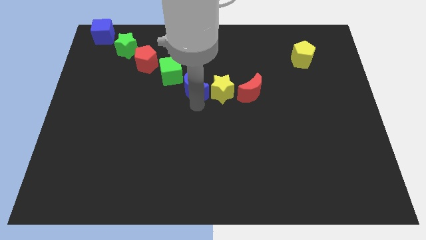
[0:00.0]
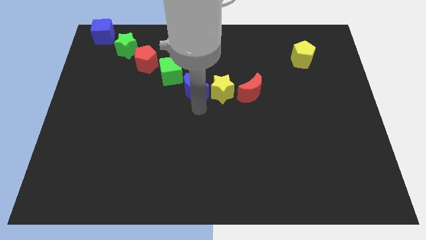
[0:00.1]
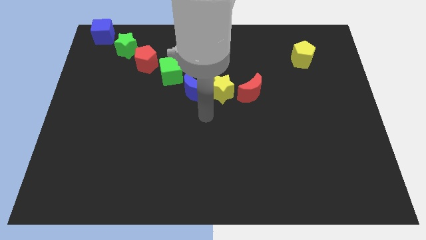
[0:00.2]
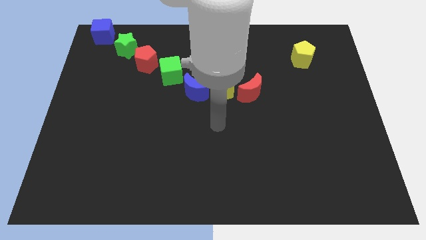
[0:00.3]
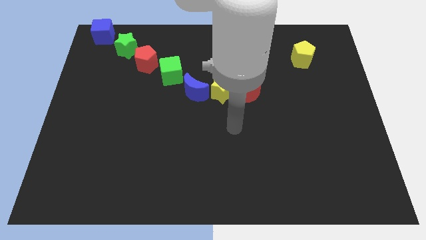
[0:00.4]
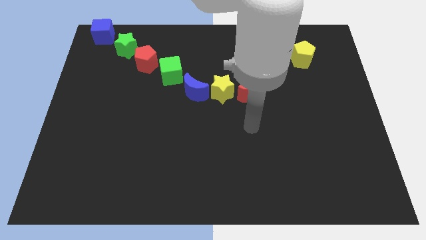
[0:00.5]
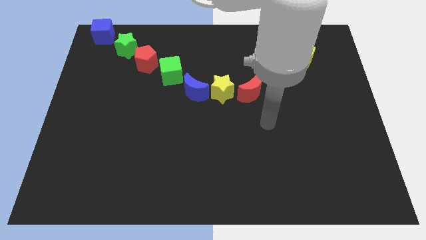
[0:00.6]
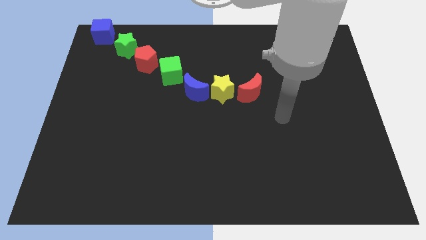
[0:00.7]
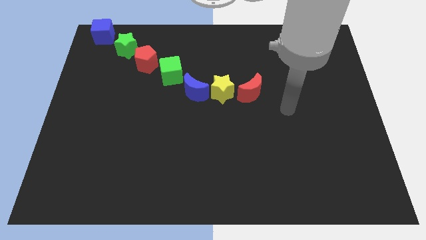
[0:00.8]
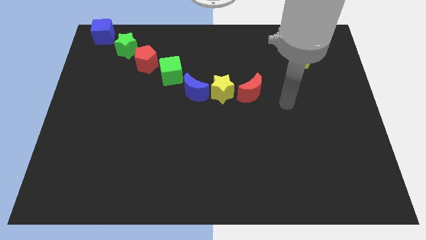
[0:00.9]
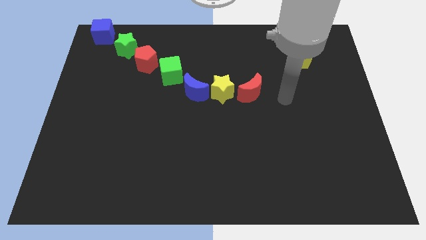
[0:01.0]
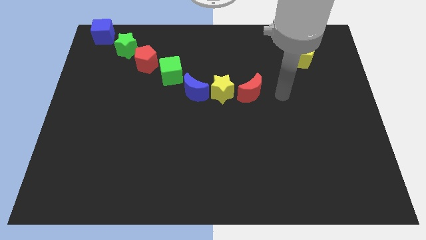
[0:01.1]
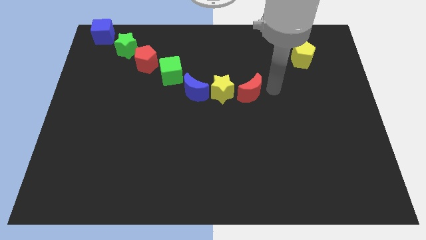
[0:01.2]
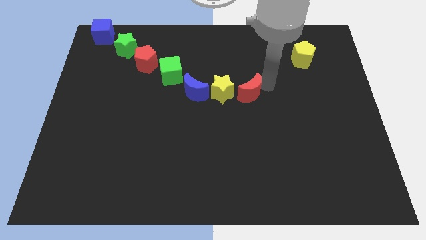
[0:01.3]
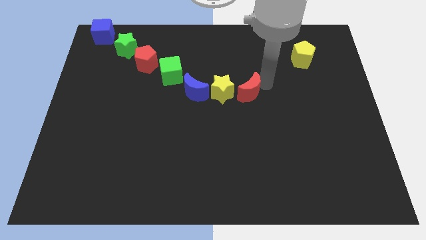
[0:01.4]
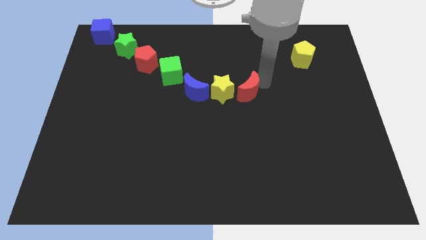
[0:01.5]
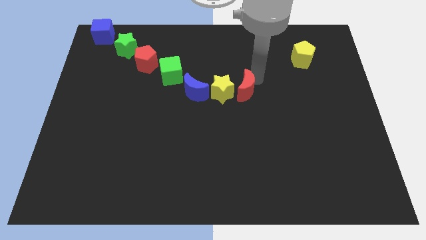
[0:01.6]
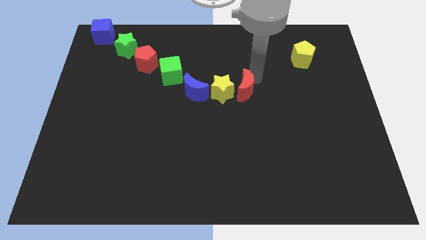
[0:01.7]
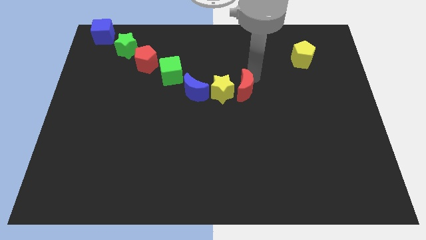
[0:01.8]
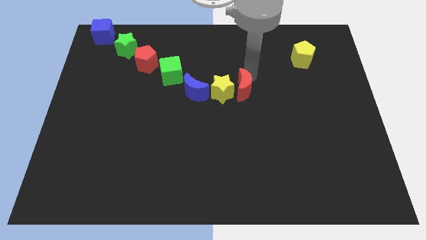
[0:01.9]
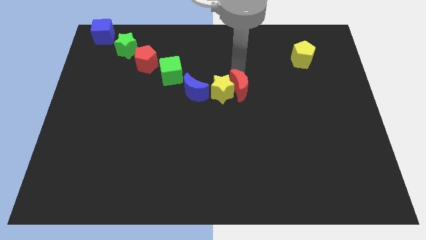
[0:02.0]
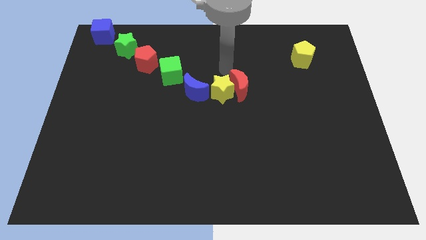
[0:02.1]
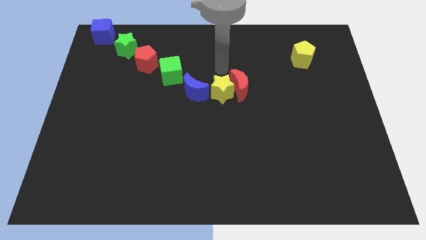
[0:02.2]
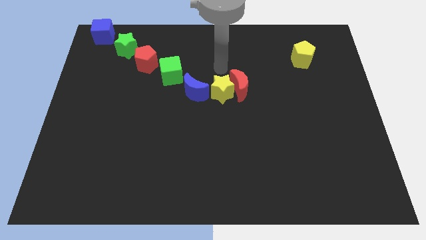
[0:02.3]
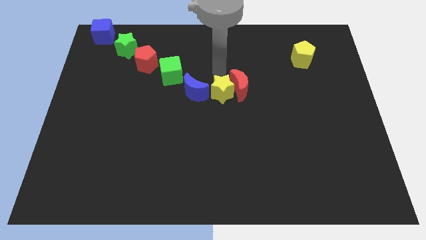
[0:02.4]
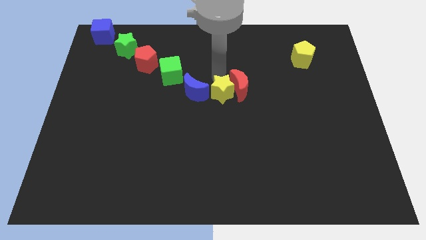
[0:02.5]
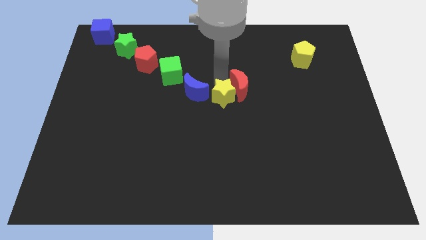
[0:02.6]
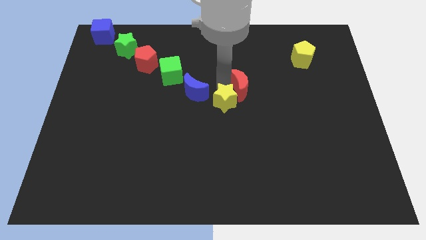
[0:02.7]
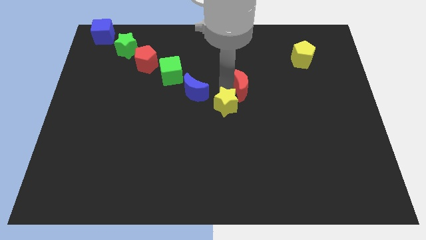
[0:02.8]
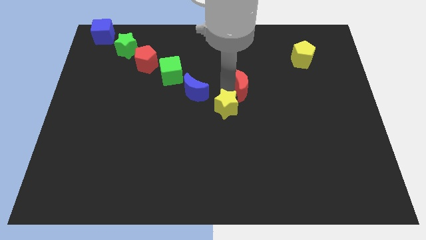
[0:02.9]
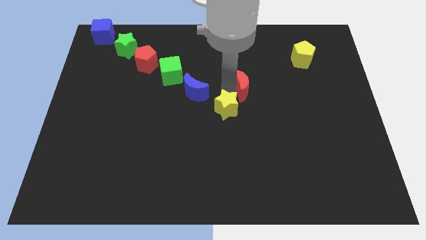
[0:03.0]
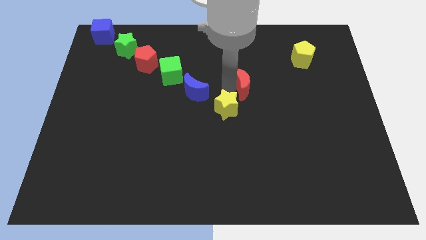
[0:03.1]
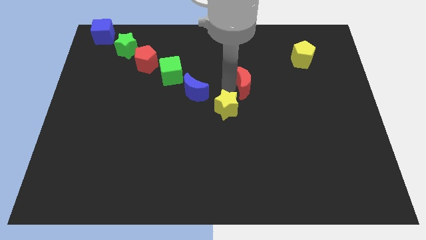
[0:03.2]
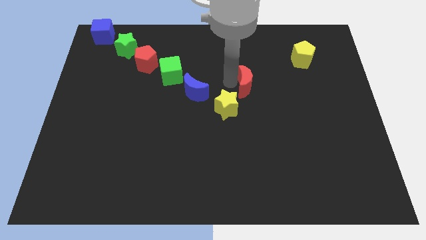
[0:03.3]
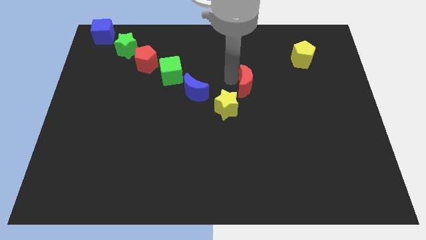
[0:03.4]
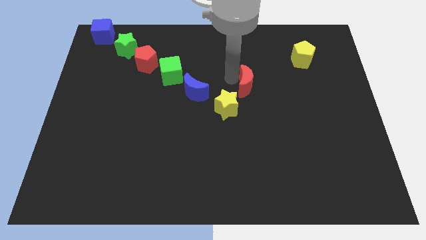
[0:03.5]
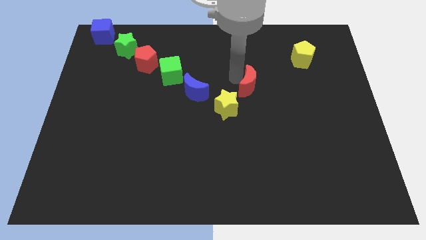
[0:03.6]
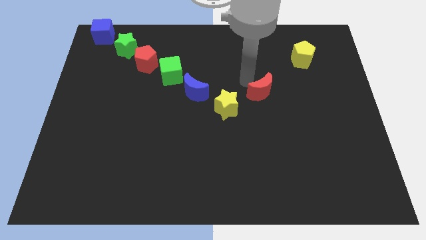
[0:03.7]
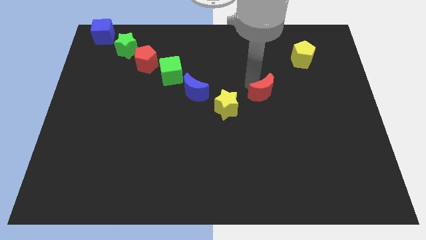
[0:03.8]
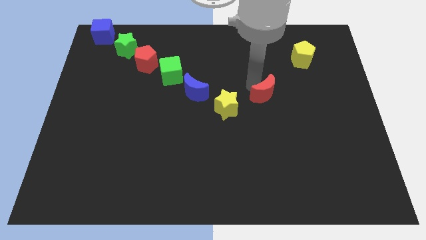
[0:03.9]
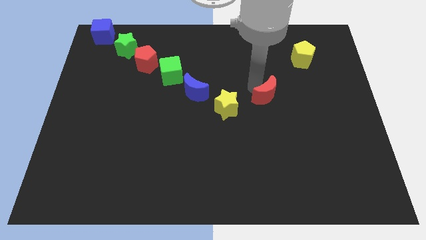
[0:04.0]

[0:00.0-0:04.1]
move the yellow star diagonally below the blue moon

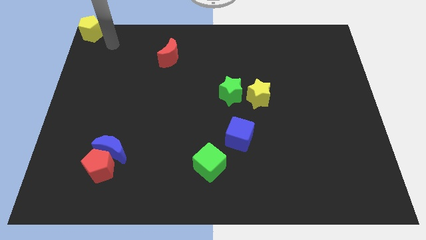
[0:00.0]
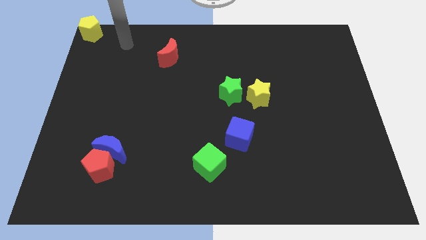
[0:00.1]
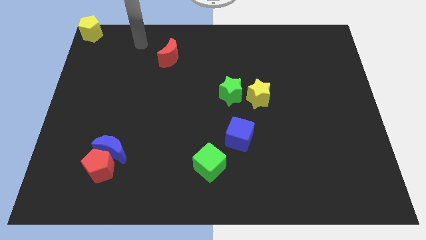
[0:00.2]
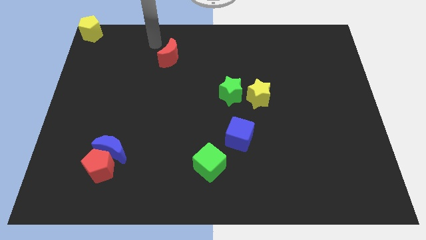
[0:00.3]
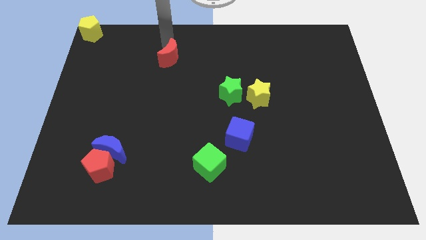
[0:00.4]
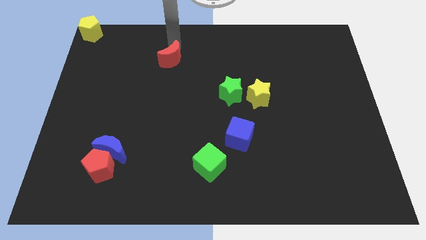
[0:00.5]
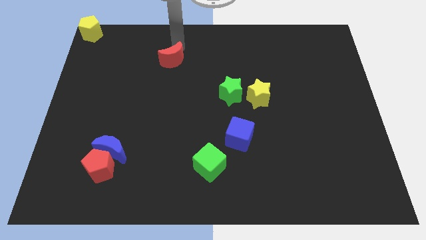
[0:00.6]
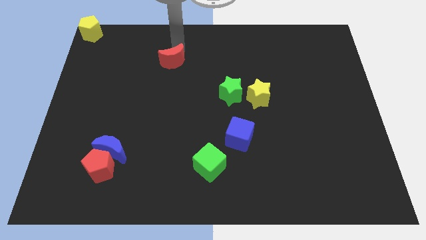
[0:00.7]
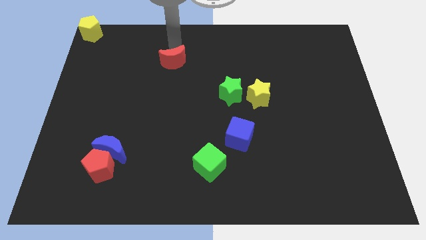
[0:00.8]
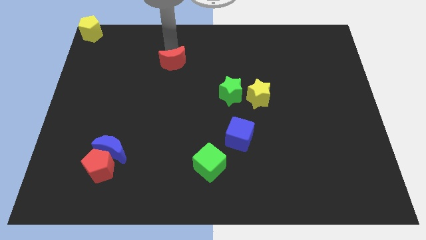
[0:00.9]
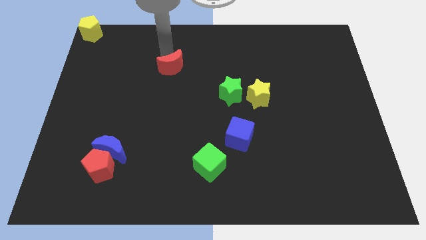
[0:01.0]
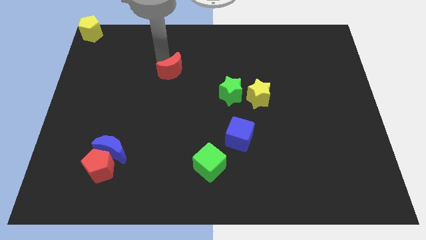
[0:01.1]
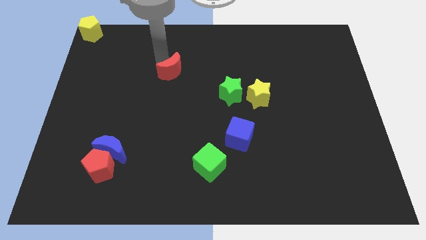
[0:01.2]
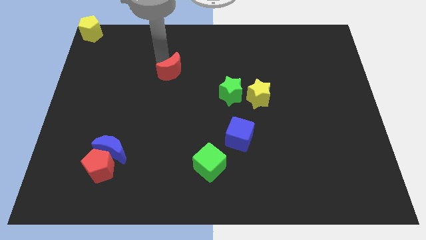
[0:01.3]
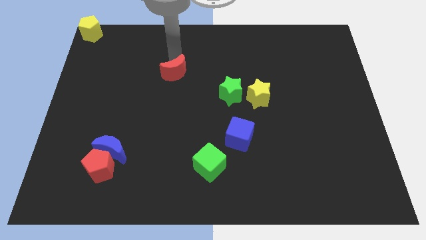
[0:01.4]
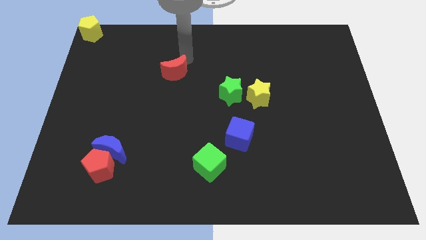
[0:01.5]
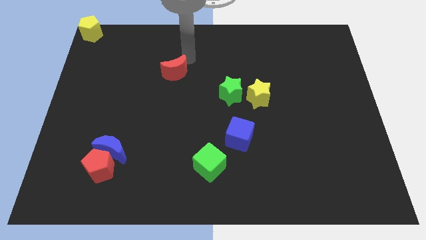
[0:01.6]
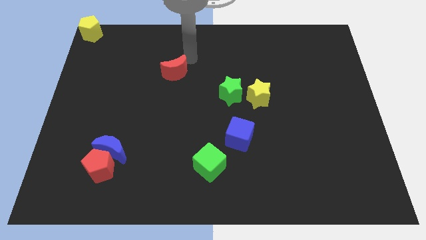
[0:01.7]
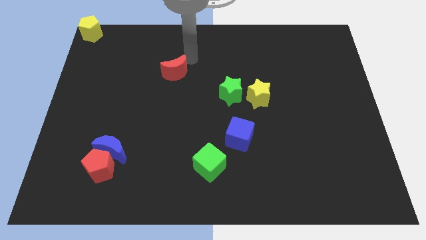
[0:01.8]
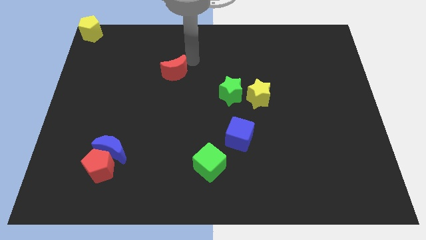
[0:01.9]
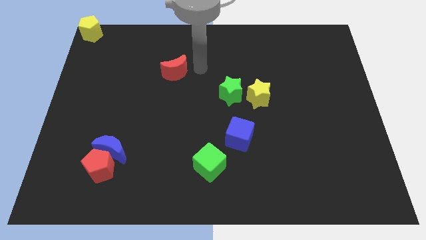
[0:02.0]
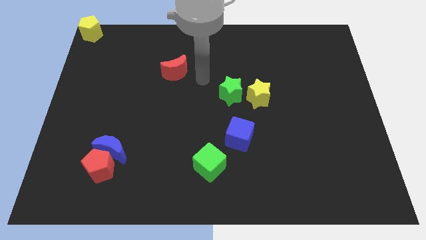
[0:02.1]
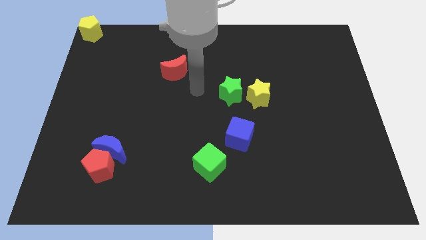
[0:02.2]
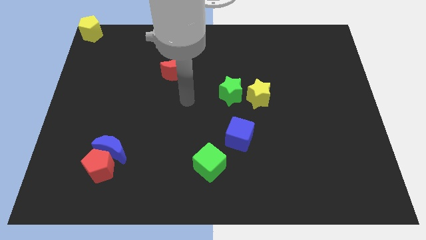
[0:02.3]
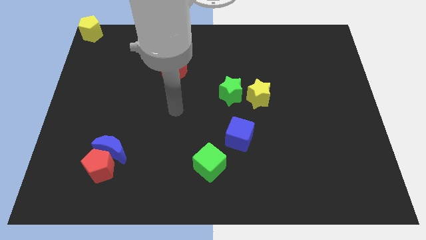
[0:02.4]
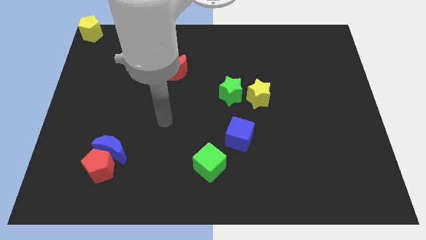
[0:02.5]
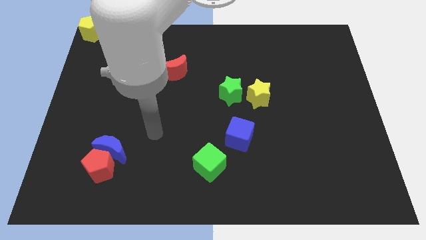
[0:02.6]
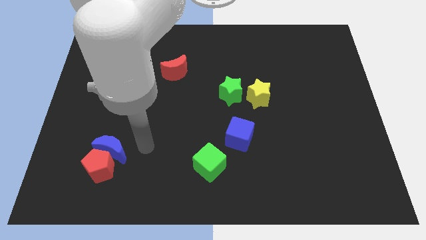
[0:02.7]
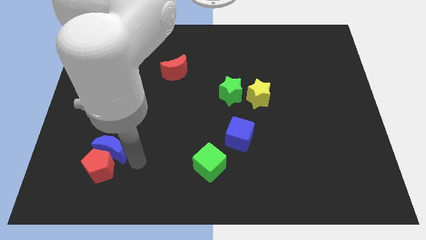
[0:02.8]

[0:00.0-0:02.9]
move red moon slightly to its downwards

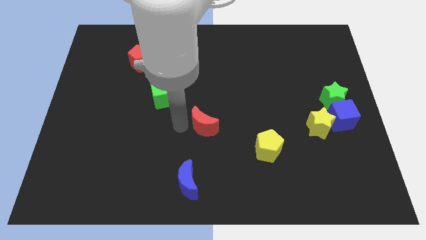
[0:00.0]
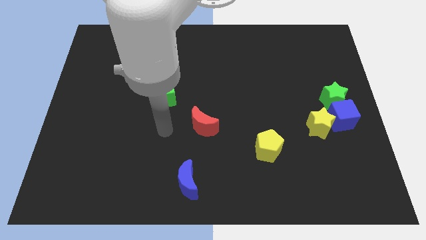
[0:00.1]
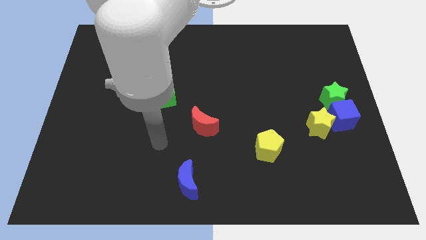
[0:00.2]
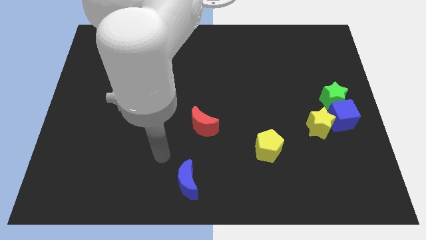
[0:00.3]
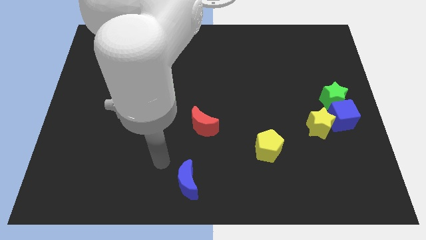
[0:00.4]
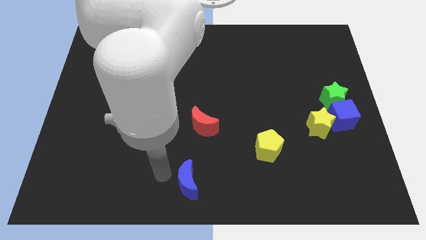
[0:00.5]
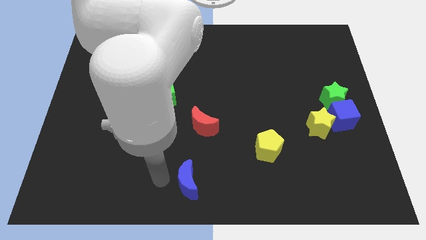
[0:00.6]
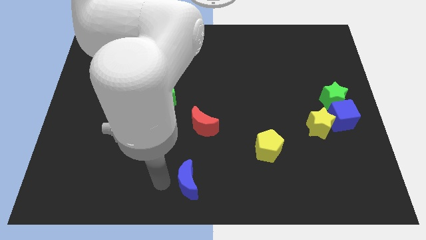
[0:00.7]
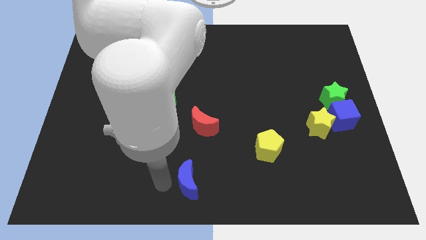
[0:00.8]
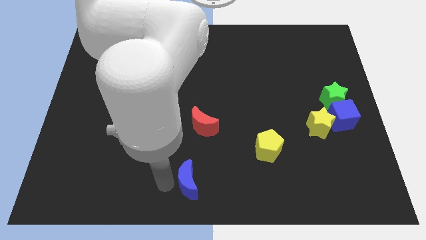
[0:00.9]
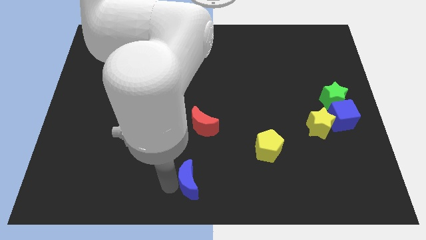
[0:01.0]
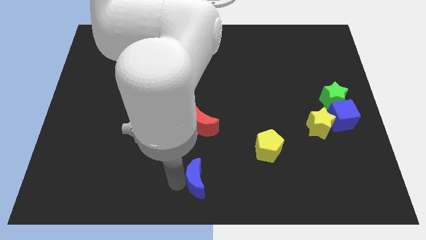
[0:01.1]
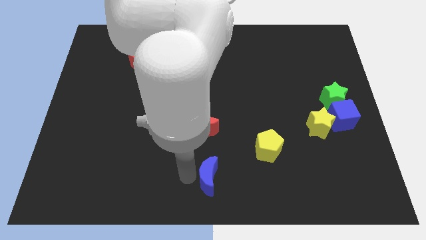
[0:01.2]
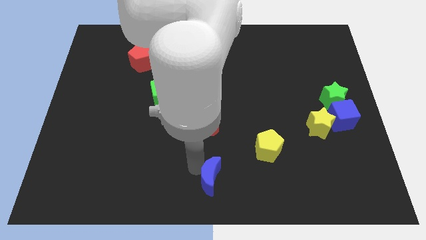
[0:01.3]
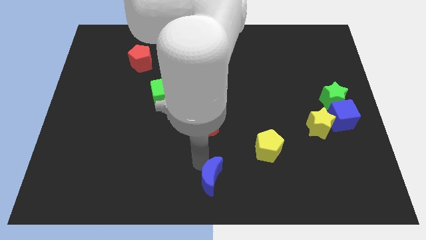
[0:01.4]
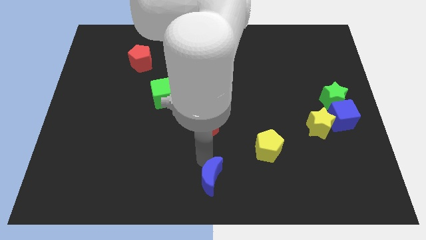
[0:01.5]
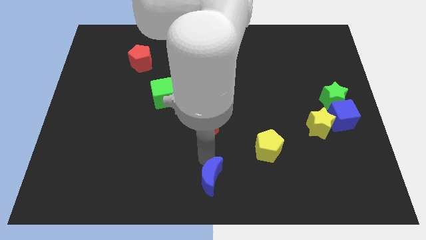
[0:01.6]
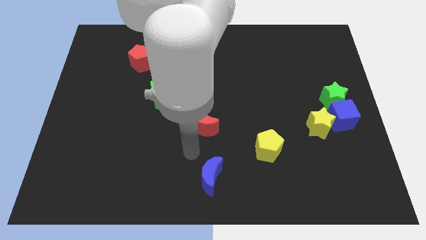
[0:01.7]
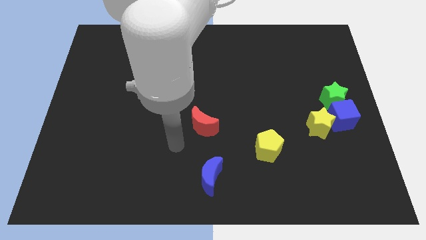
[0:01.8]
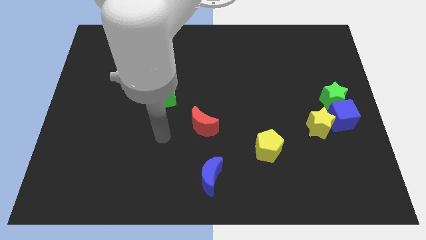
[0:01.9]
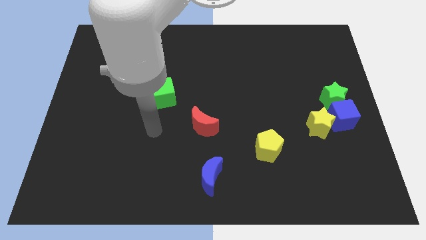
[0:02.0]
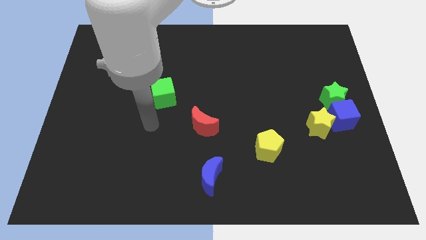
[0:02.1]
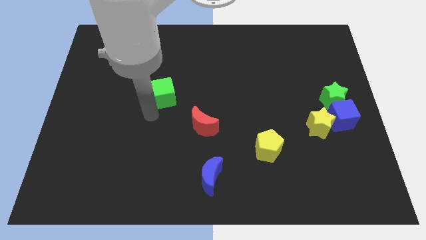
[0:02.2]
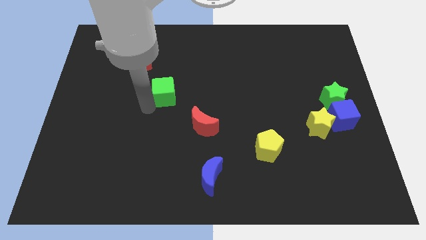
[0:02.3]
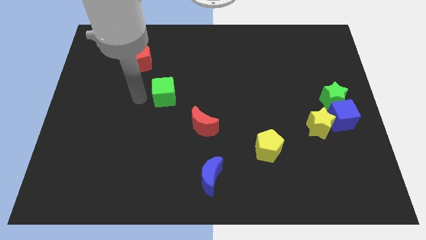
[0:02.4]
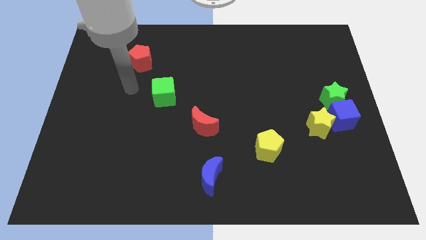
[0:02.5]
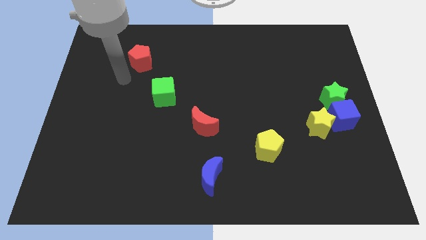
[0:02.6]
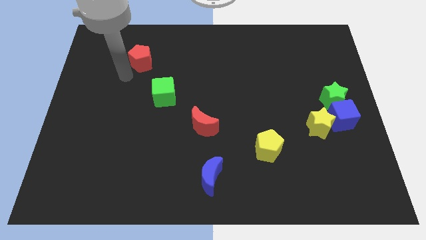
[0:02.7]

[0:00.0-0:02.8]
place blue crescent to the bottom of red crescent
